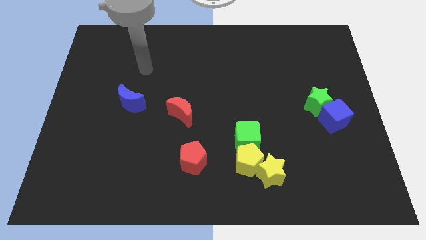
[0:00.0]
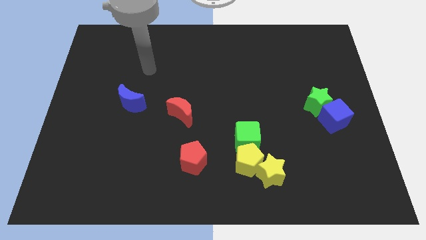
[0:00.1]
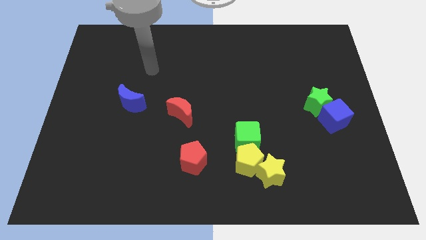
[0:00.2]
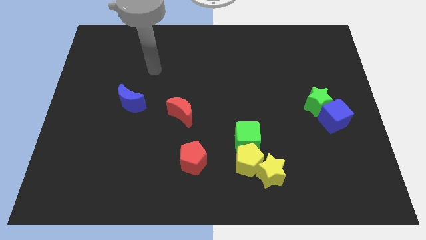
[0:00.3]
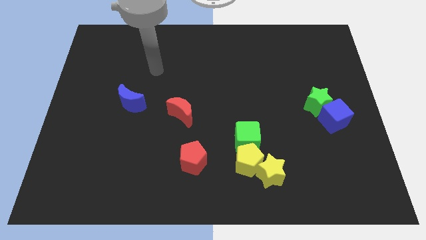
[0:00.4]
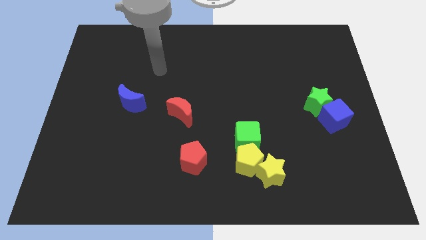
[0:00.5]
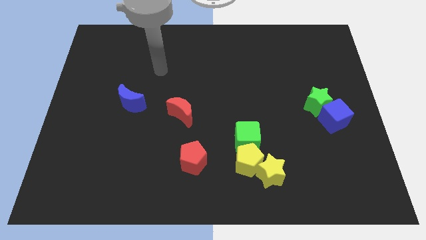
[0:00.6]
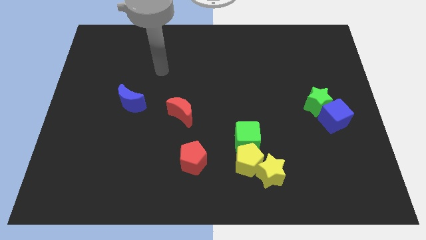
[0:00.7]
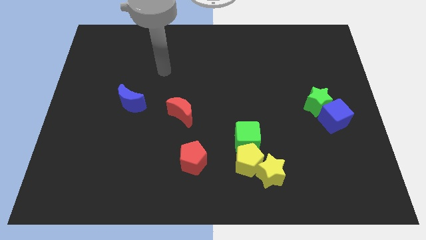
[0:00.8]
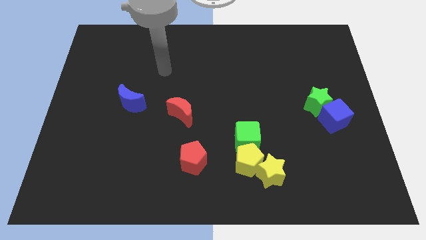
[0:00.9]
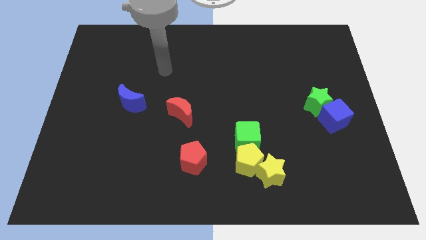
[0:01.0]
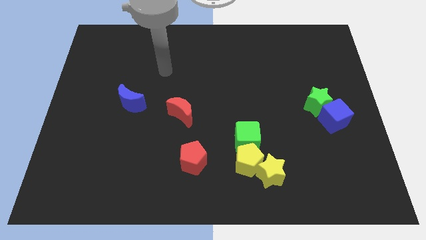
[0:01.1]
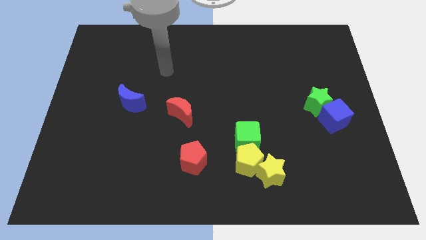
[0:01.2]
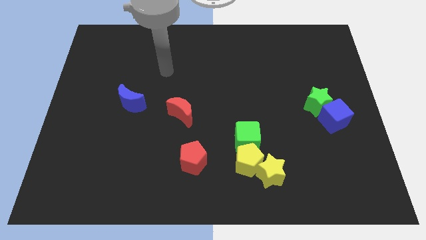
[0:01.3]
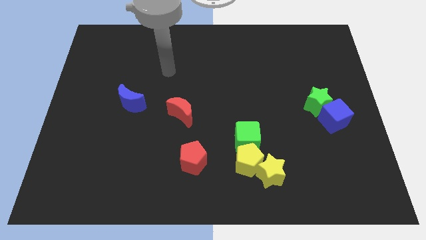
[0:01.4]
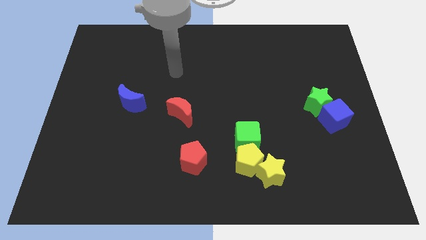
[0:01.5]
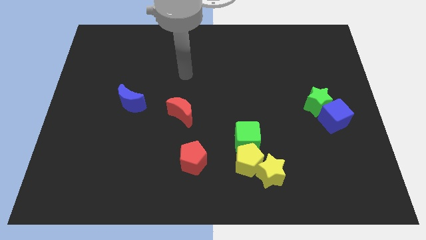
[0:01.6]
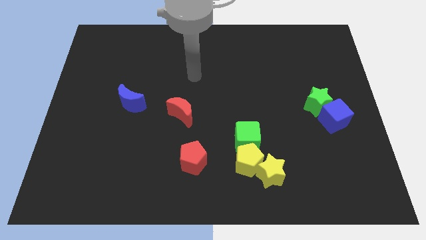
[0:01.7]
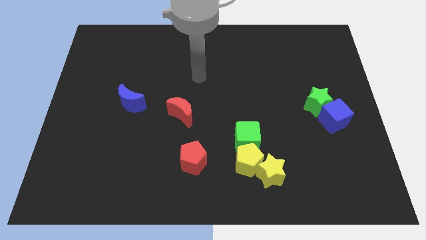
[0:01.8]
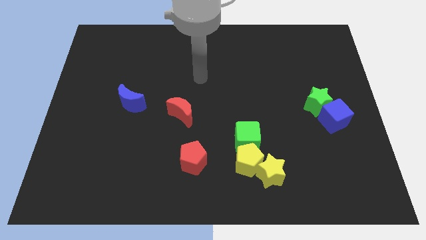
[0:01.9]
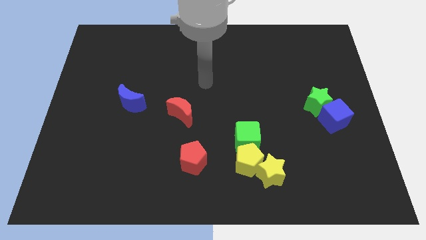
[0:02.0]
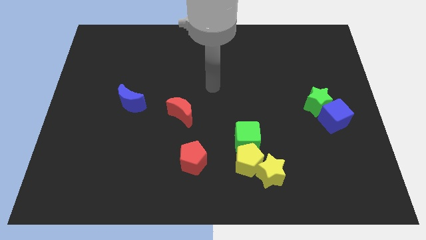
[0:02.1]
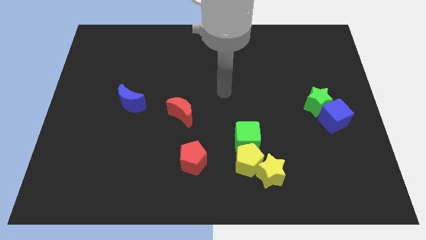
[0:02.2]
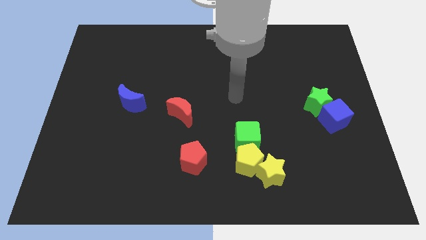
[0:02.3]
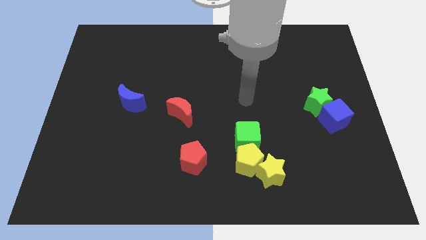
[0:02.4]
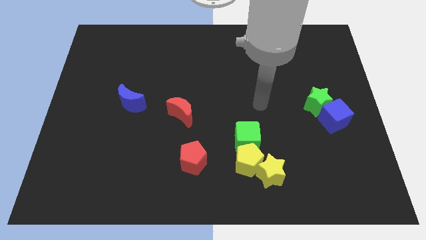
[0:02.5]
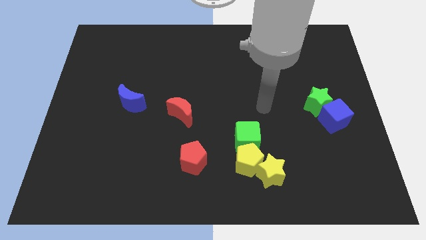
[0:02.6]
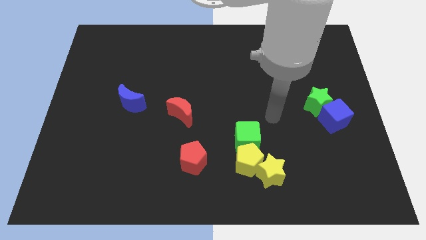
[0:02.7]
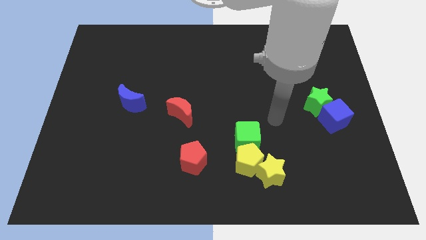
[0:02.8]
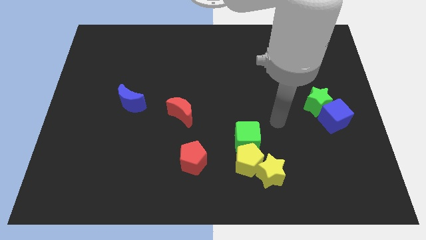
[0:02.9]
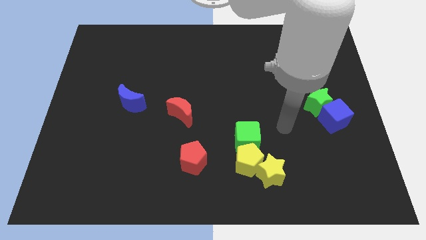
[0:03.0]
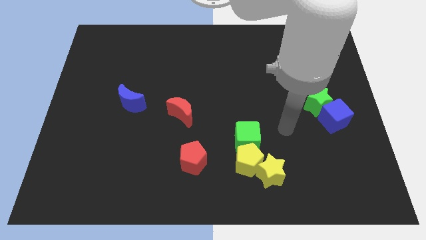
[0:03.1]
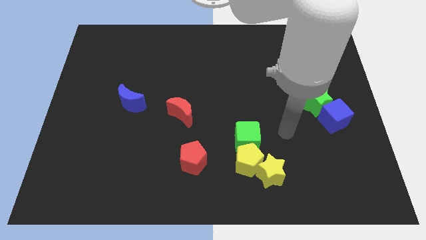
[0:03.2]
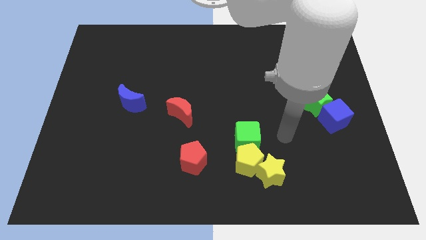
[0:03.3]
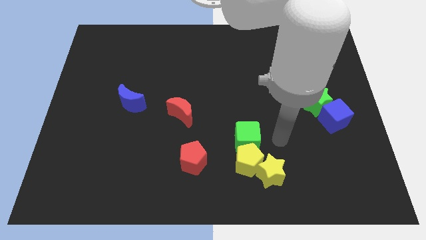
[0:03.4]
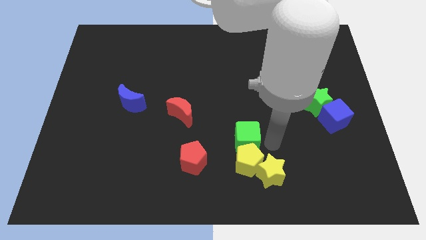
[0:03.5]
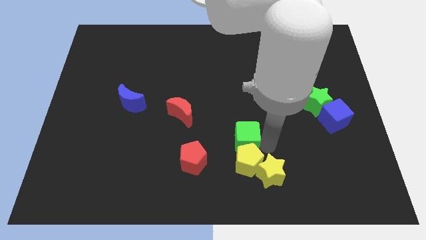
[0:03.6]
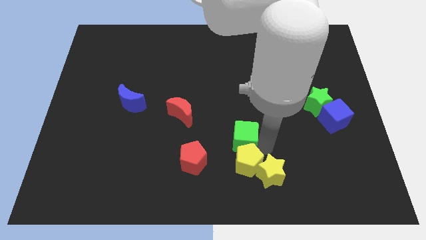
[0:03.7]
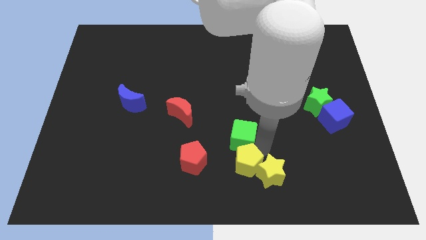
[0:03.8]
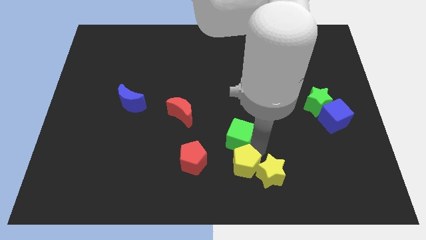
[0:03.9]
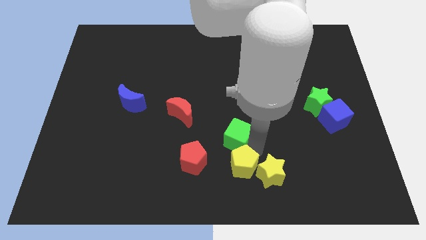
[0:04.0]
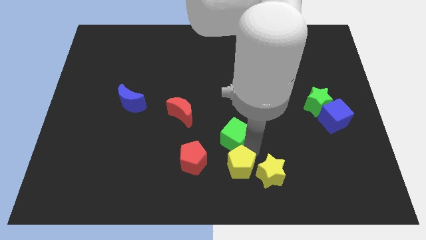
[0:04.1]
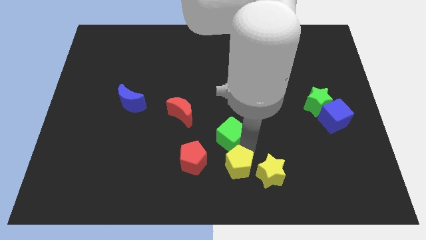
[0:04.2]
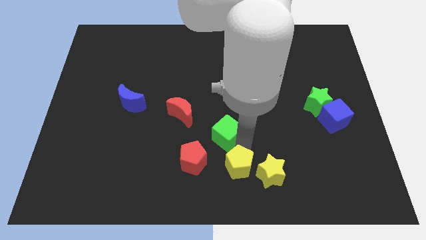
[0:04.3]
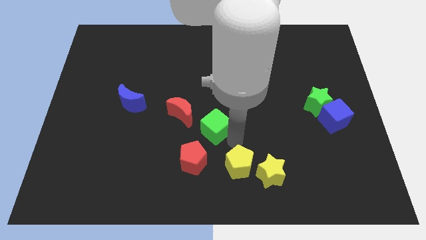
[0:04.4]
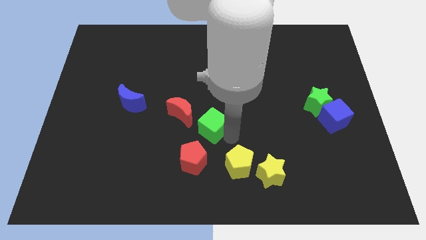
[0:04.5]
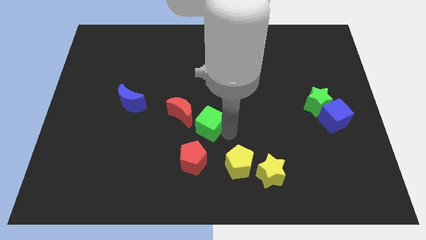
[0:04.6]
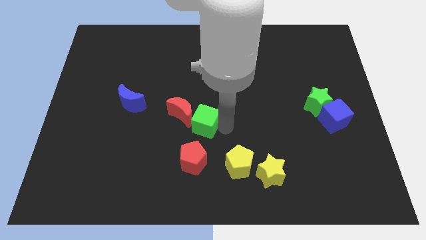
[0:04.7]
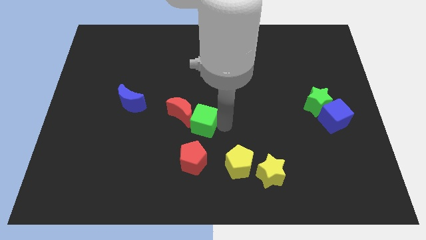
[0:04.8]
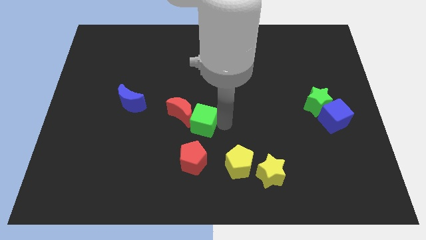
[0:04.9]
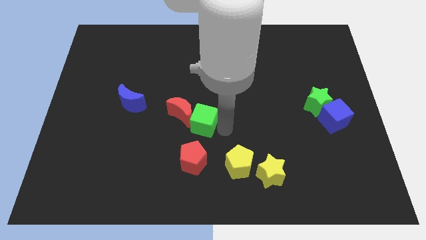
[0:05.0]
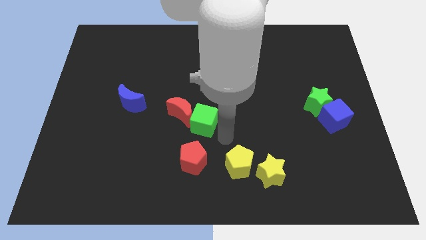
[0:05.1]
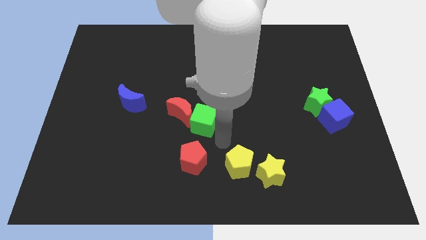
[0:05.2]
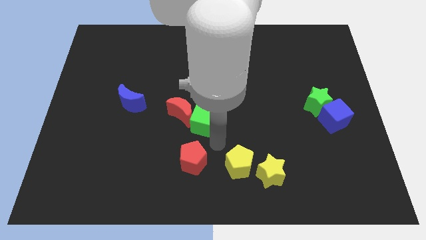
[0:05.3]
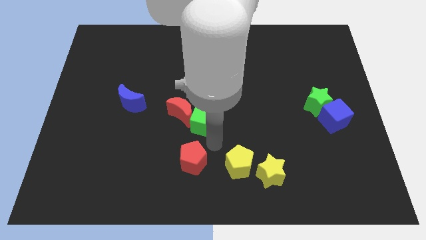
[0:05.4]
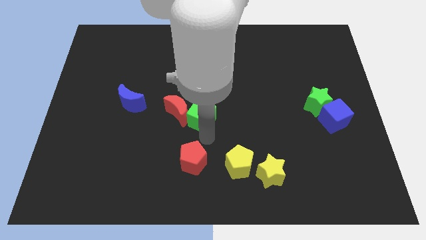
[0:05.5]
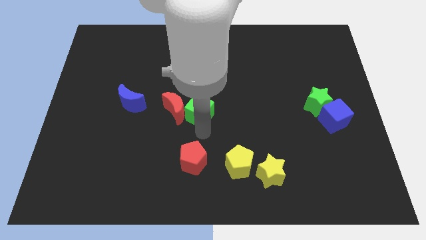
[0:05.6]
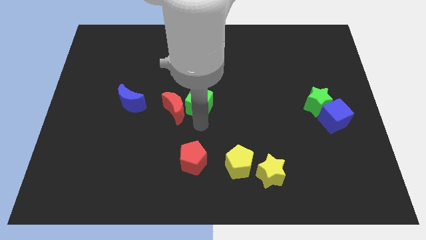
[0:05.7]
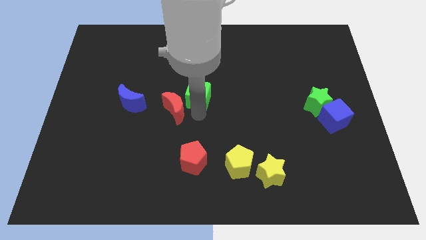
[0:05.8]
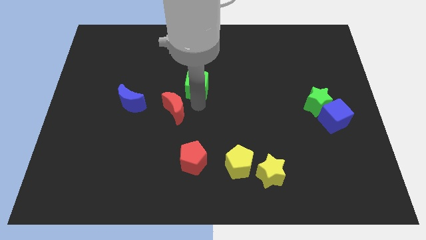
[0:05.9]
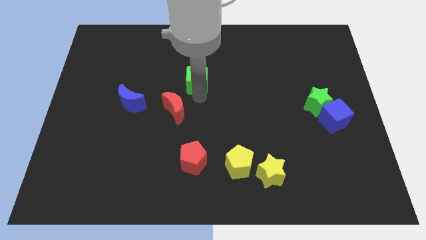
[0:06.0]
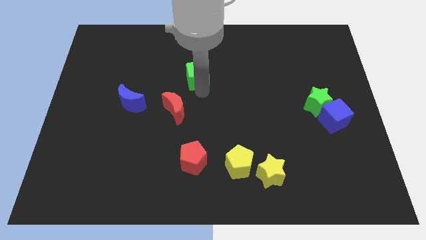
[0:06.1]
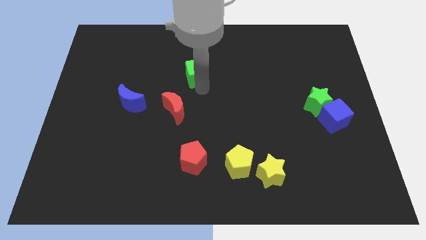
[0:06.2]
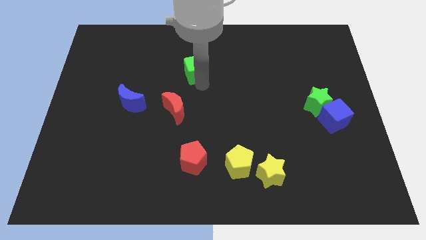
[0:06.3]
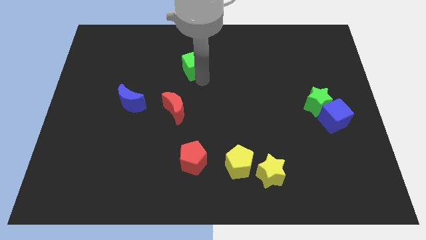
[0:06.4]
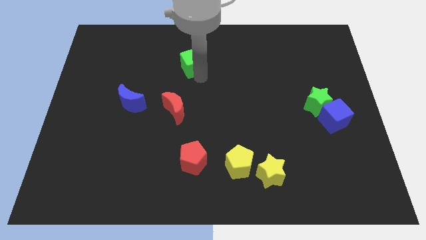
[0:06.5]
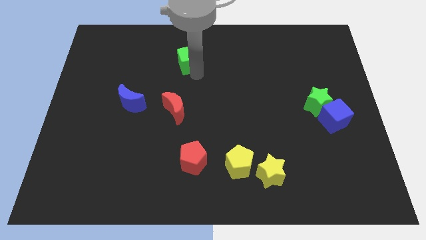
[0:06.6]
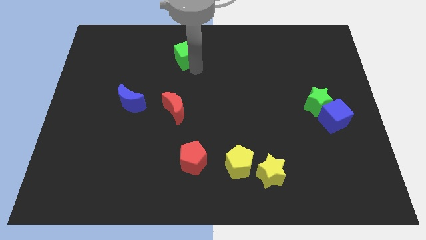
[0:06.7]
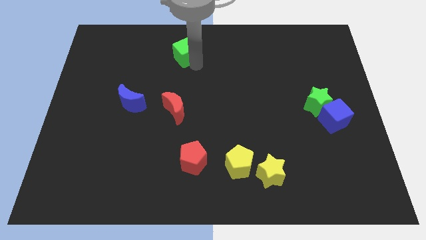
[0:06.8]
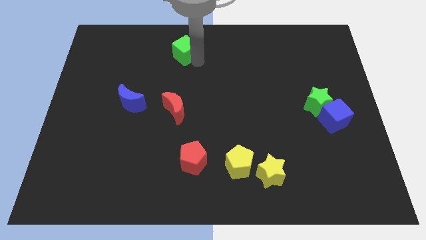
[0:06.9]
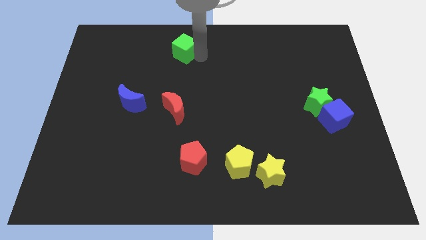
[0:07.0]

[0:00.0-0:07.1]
separate green cube from the yellow pentagon

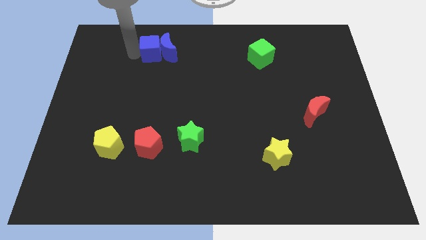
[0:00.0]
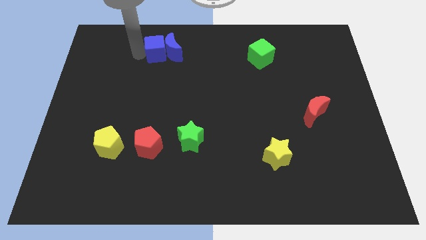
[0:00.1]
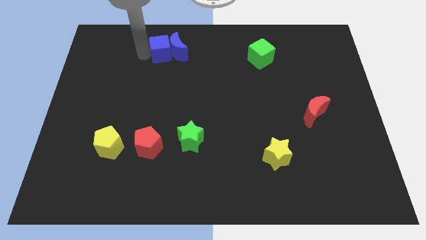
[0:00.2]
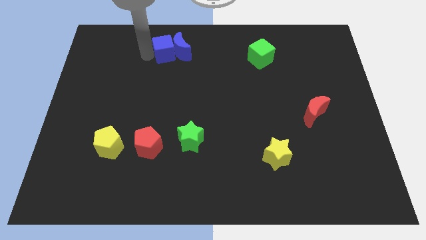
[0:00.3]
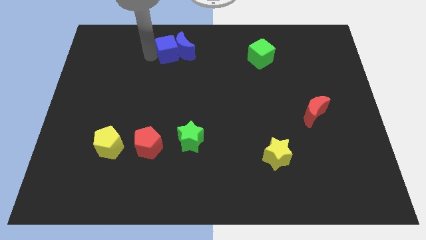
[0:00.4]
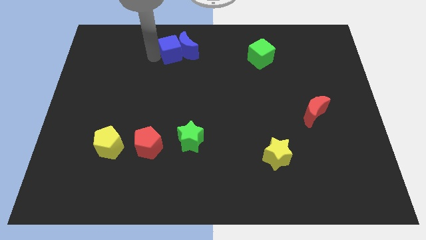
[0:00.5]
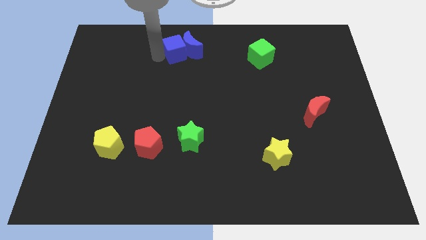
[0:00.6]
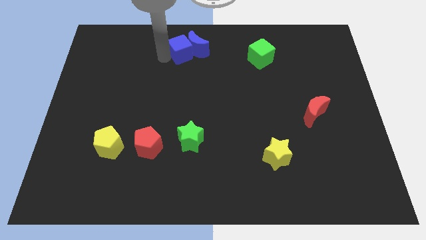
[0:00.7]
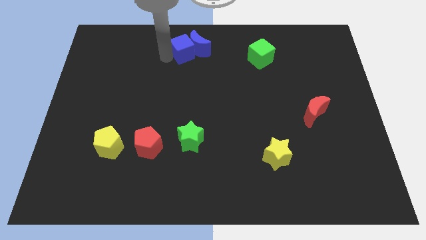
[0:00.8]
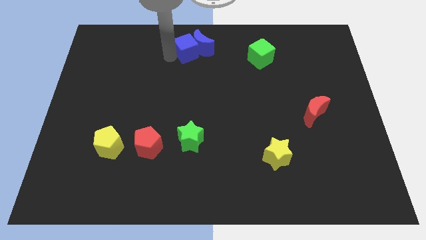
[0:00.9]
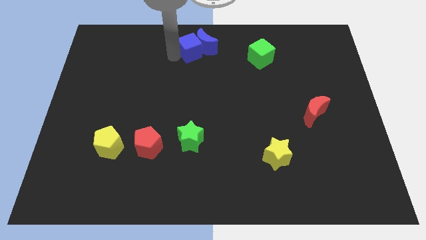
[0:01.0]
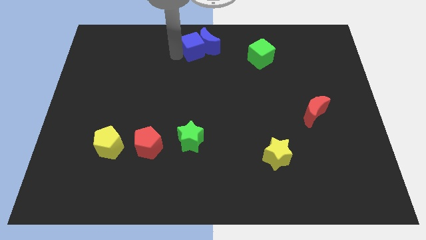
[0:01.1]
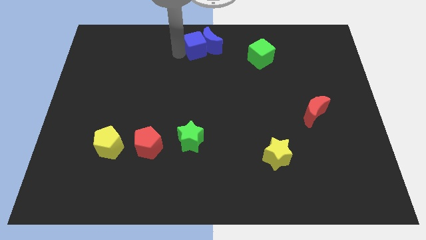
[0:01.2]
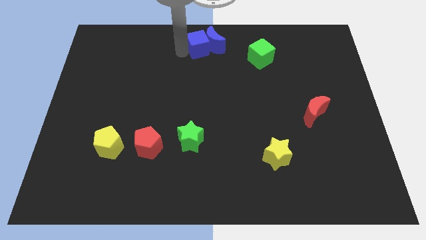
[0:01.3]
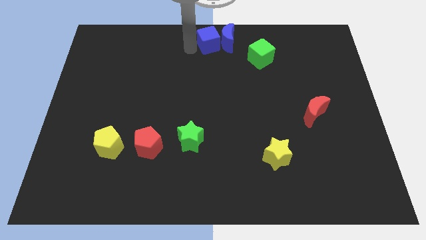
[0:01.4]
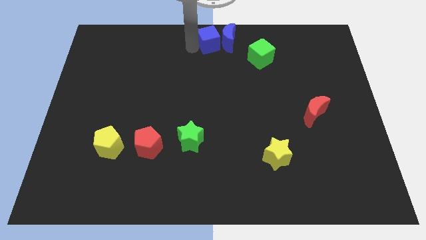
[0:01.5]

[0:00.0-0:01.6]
place the blue blocks vertically above the green star

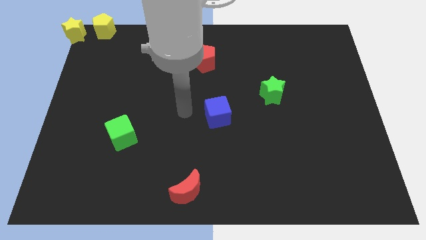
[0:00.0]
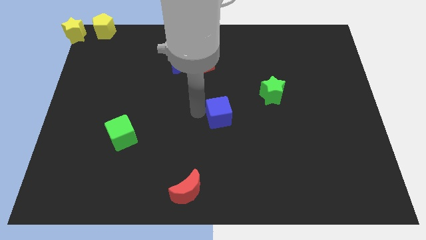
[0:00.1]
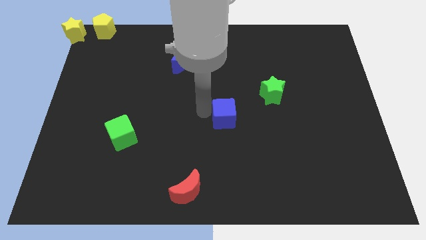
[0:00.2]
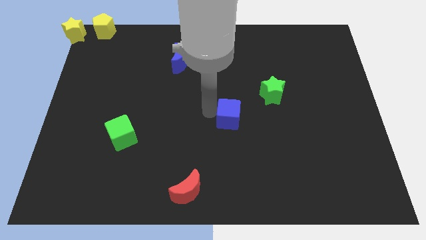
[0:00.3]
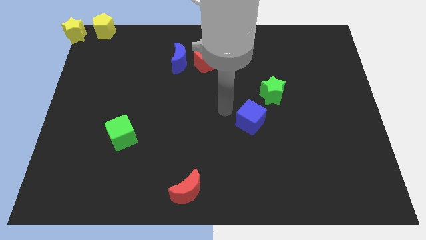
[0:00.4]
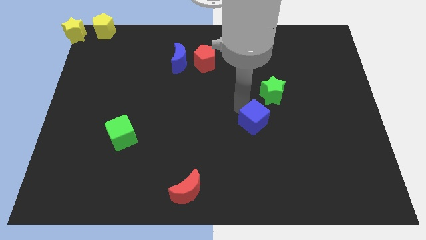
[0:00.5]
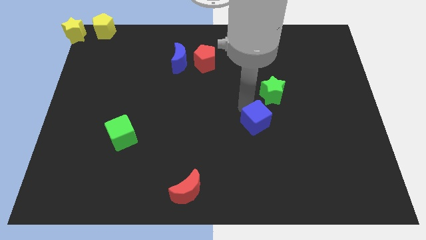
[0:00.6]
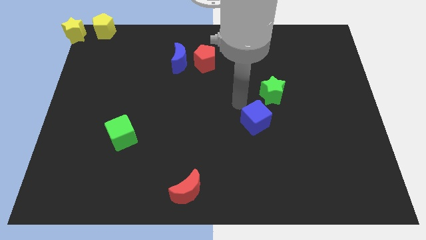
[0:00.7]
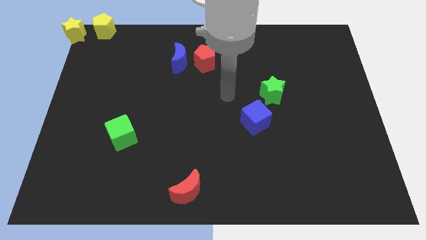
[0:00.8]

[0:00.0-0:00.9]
place the blue cube at the bottom left side of green star
